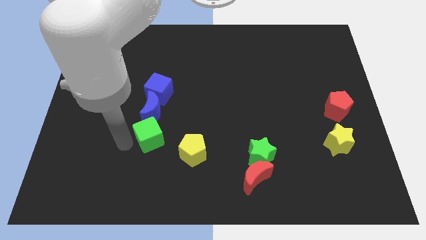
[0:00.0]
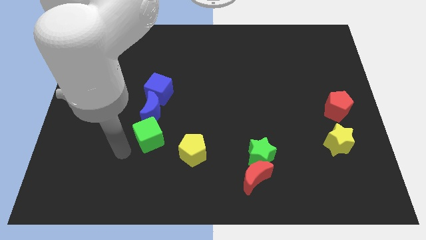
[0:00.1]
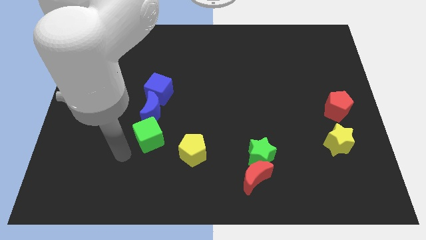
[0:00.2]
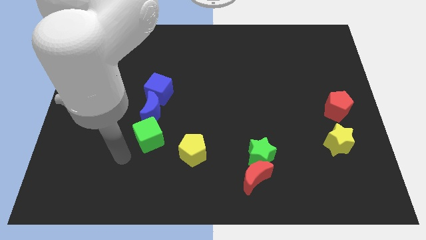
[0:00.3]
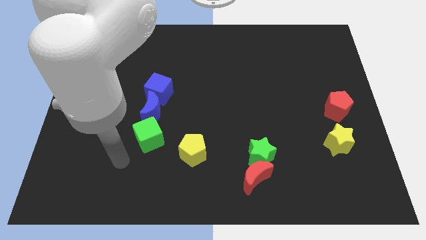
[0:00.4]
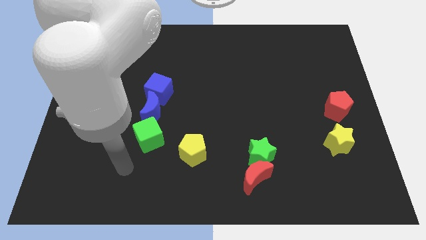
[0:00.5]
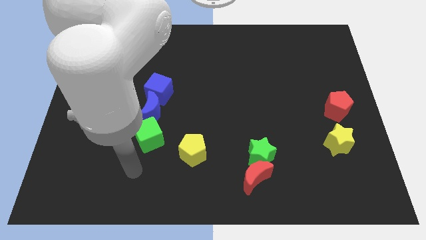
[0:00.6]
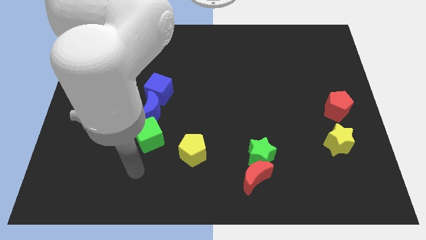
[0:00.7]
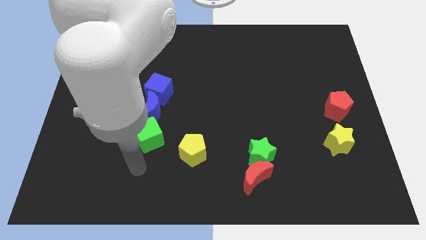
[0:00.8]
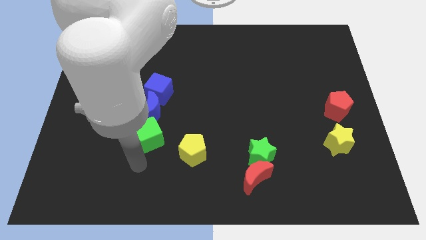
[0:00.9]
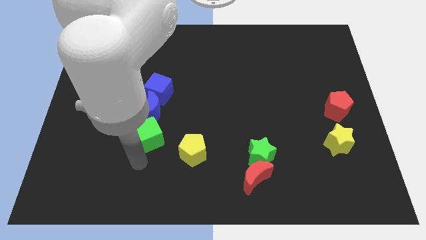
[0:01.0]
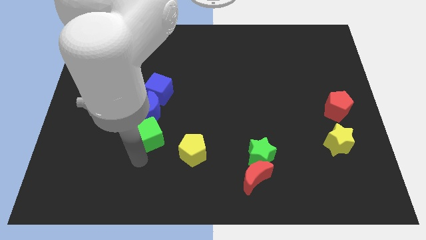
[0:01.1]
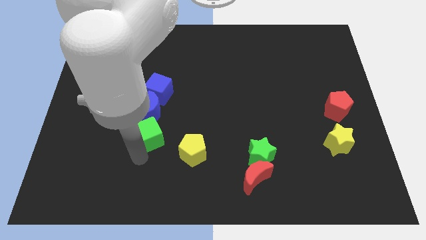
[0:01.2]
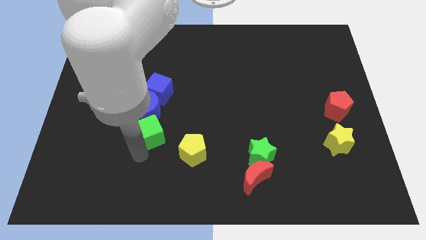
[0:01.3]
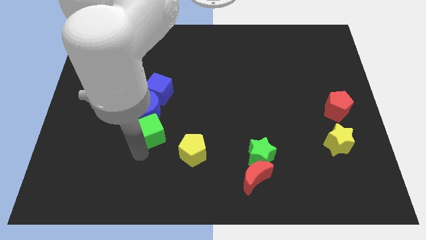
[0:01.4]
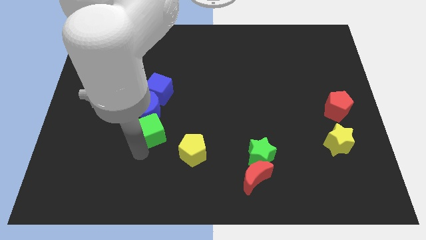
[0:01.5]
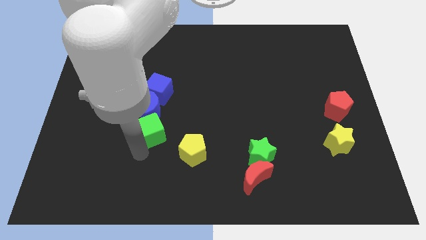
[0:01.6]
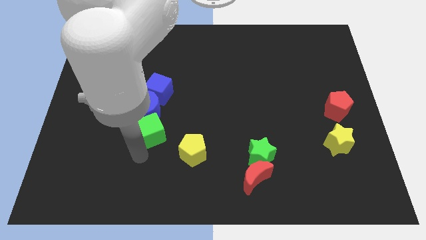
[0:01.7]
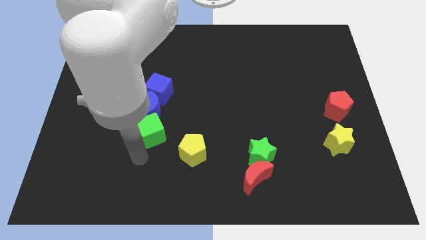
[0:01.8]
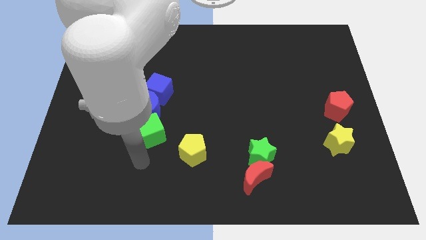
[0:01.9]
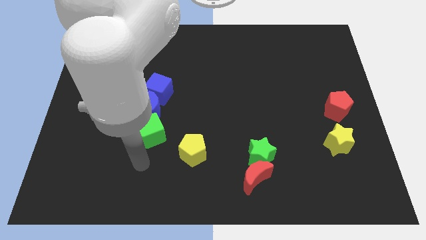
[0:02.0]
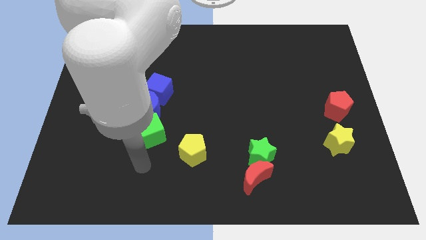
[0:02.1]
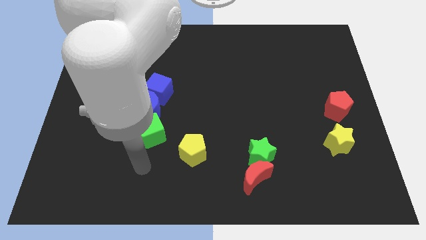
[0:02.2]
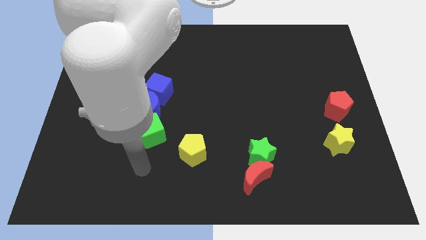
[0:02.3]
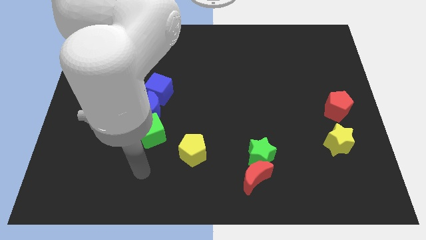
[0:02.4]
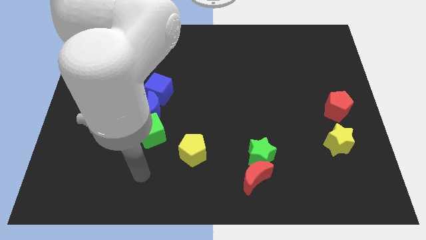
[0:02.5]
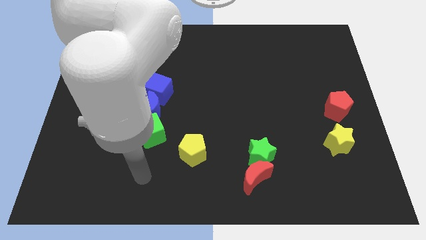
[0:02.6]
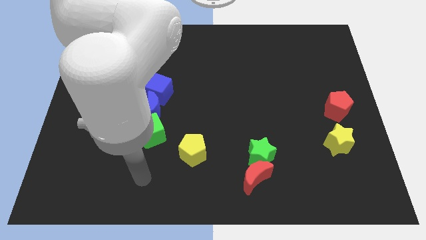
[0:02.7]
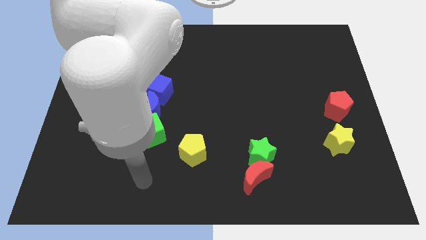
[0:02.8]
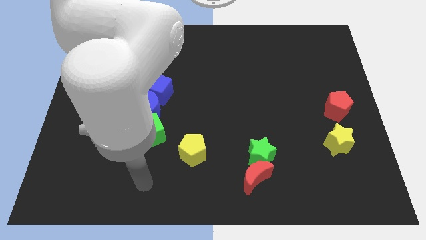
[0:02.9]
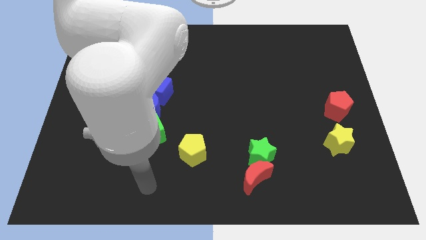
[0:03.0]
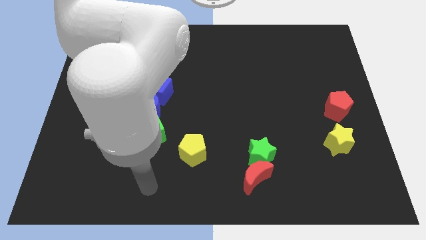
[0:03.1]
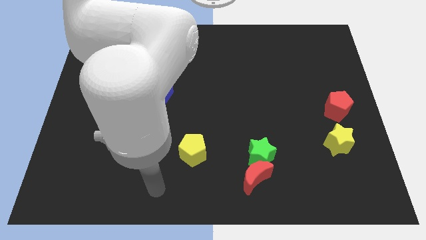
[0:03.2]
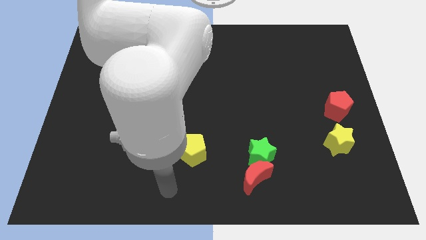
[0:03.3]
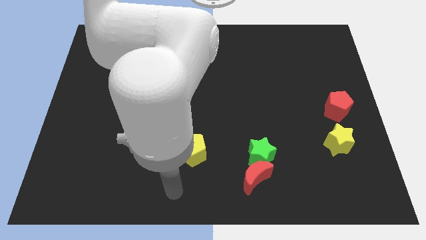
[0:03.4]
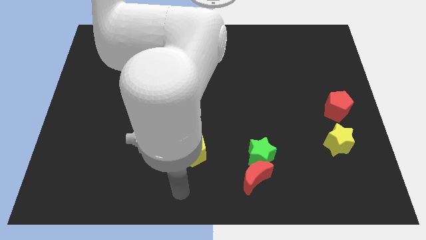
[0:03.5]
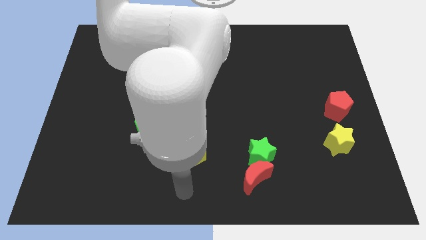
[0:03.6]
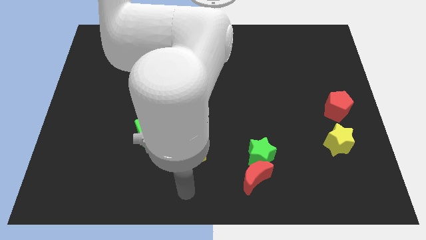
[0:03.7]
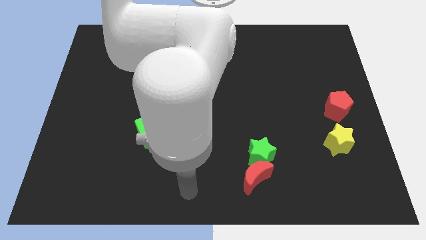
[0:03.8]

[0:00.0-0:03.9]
push the green cube towards the blue moon

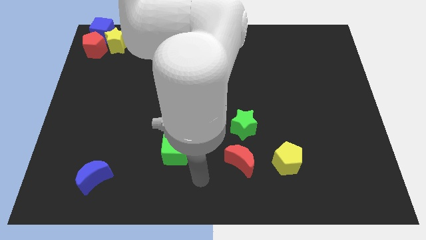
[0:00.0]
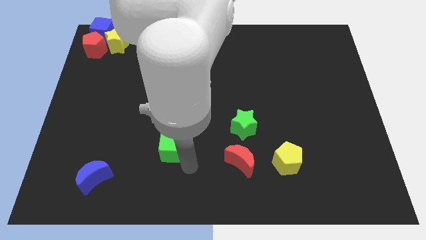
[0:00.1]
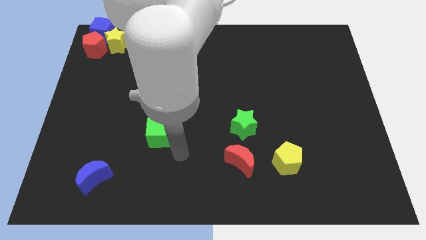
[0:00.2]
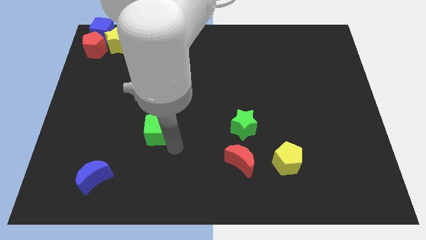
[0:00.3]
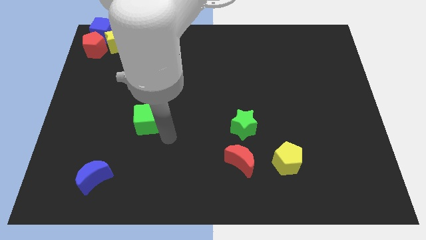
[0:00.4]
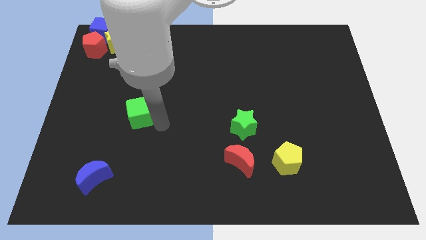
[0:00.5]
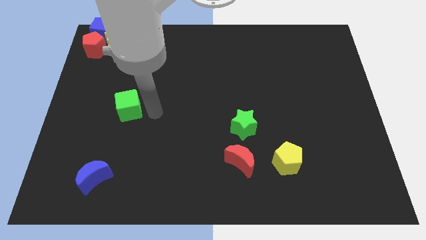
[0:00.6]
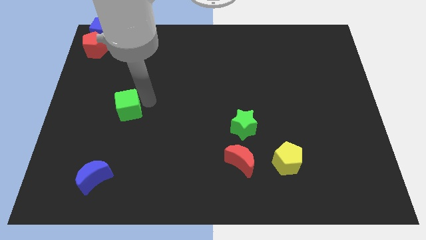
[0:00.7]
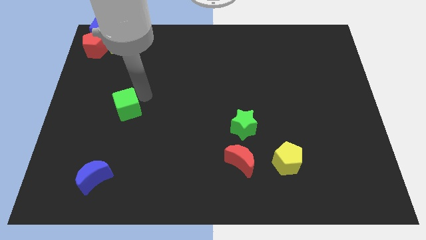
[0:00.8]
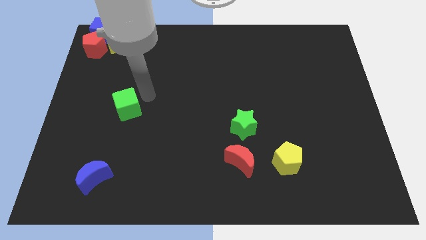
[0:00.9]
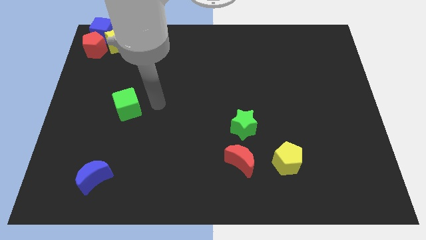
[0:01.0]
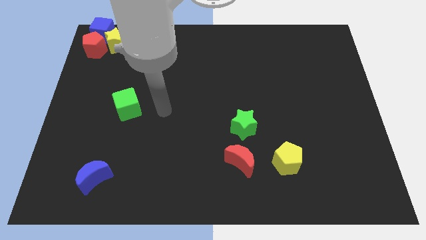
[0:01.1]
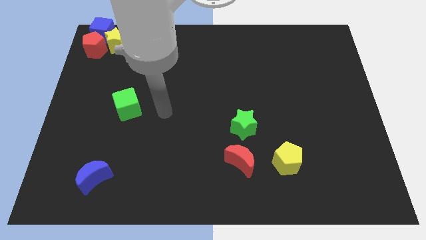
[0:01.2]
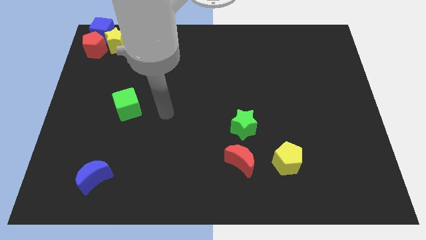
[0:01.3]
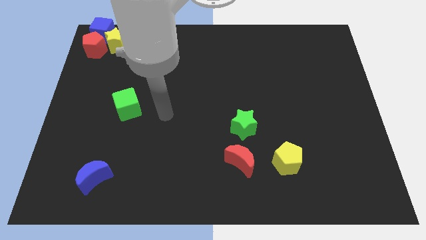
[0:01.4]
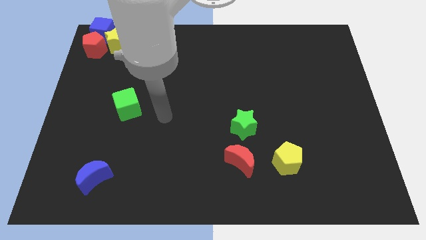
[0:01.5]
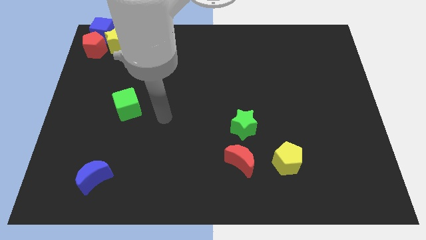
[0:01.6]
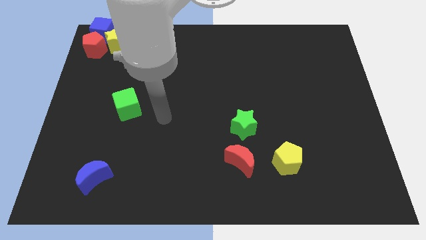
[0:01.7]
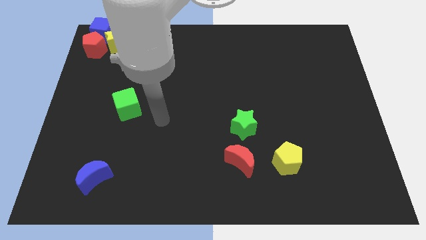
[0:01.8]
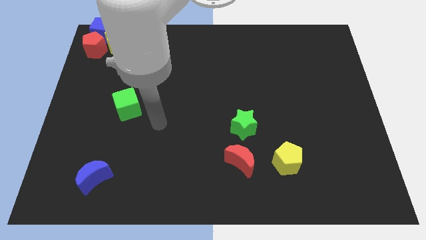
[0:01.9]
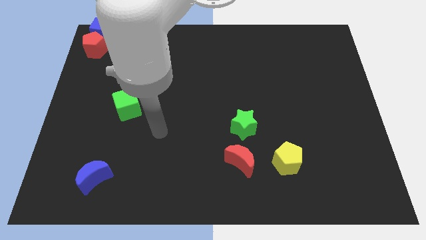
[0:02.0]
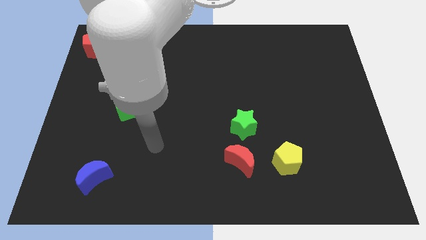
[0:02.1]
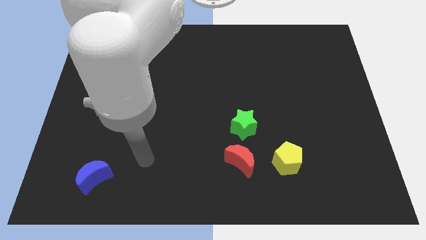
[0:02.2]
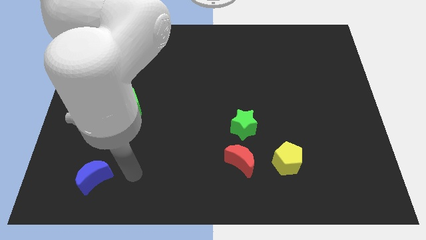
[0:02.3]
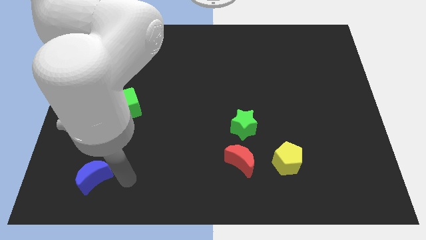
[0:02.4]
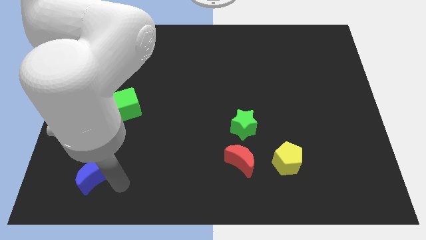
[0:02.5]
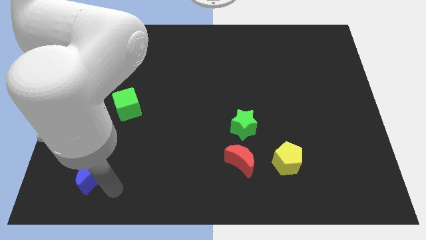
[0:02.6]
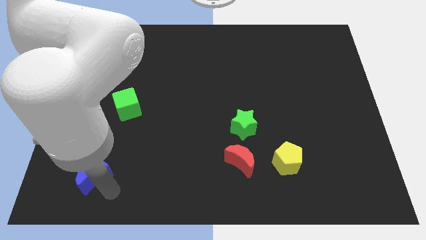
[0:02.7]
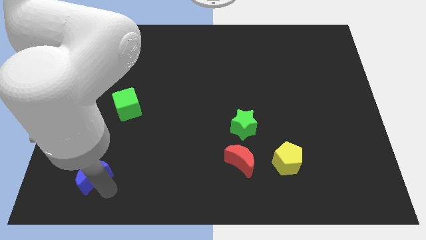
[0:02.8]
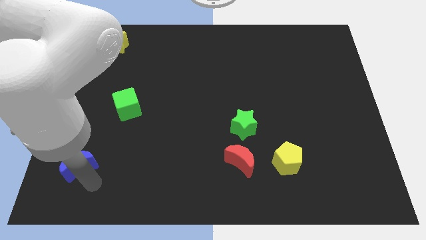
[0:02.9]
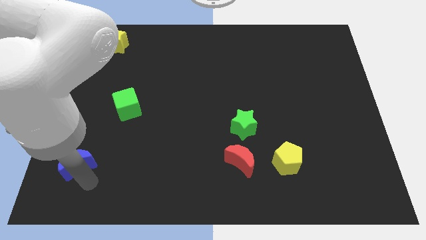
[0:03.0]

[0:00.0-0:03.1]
move the green cube diagonally top right to blue moon

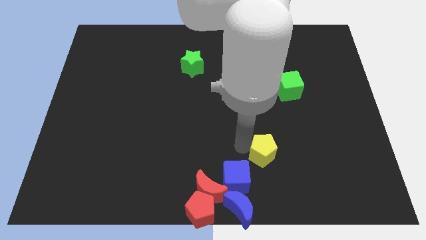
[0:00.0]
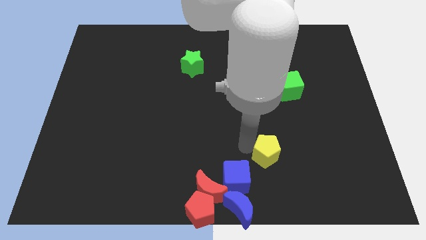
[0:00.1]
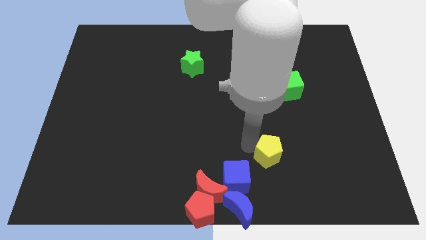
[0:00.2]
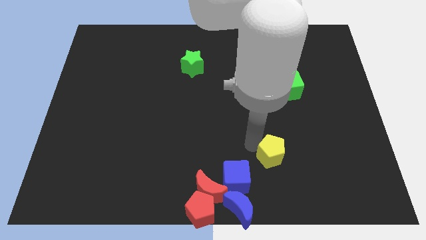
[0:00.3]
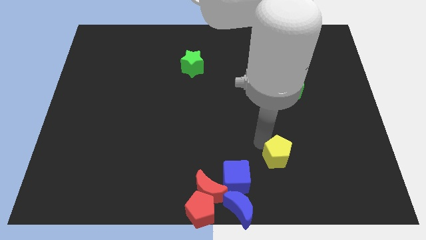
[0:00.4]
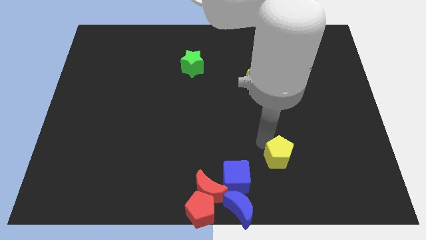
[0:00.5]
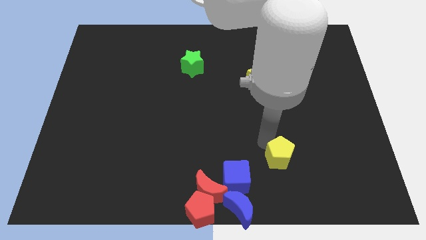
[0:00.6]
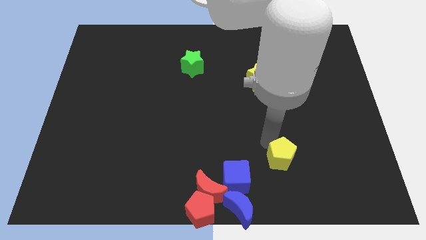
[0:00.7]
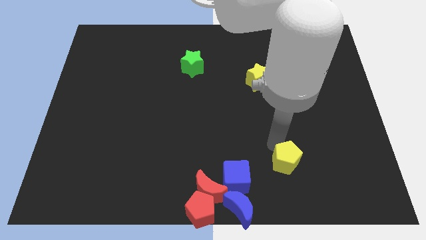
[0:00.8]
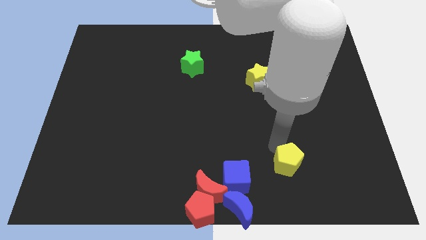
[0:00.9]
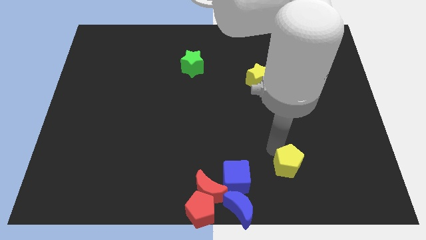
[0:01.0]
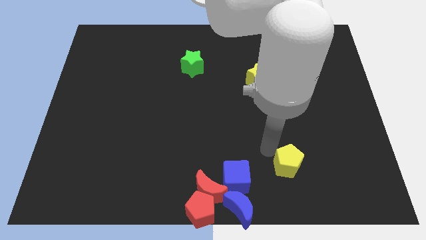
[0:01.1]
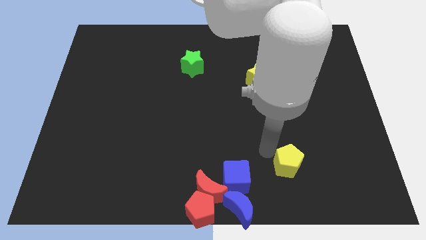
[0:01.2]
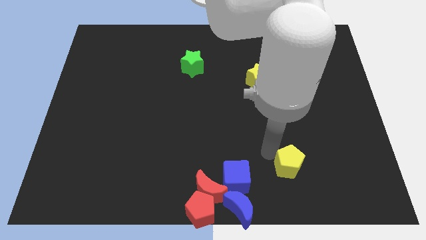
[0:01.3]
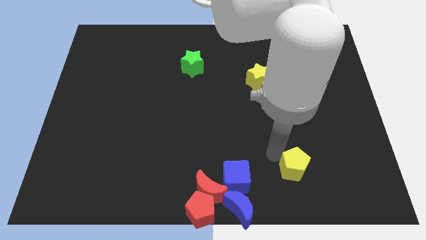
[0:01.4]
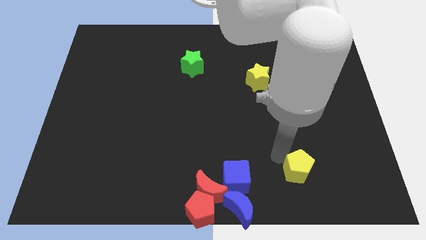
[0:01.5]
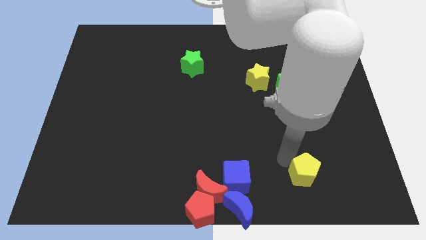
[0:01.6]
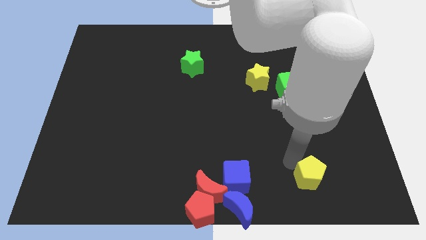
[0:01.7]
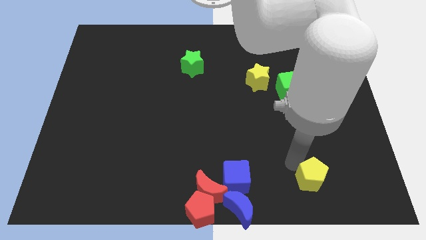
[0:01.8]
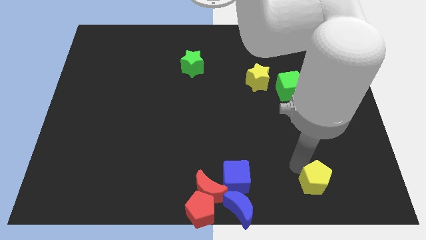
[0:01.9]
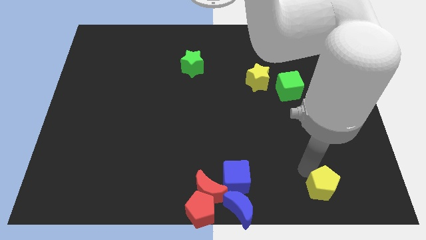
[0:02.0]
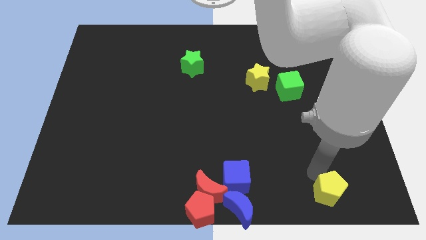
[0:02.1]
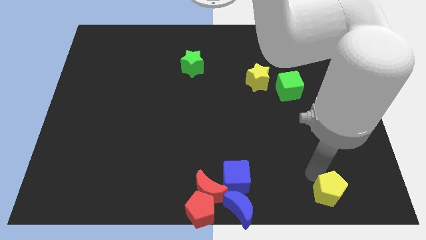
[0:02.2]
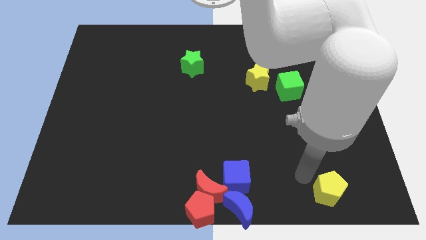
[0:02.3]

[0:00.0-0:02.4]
push the yellow pentagon towards the right side down end
